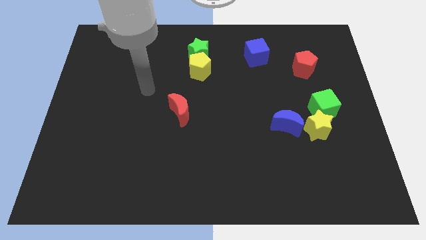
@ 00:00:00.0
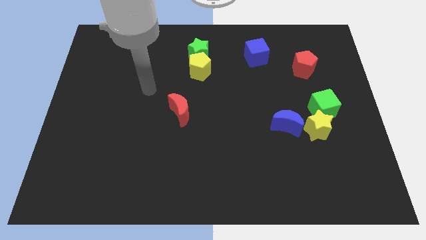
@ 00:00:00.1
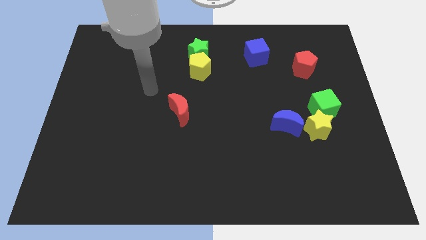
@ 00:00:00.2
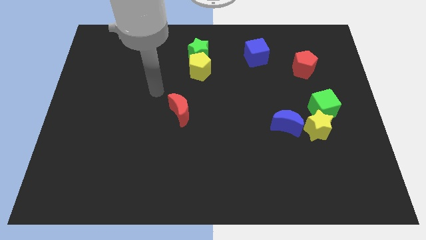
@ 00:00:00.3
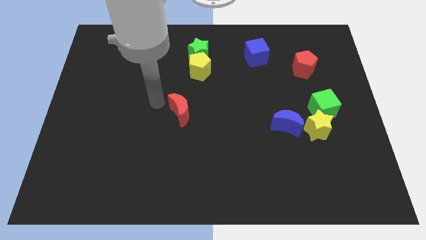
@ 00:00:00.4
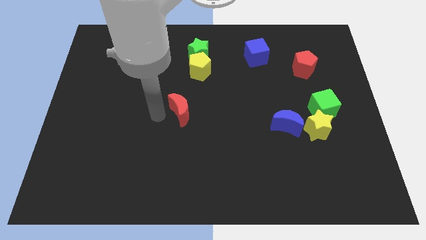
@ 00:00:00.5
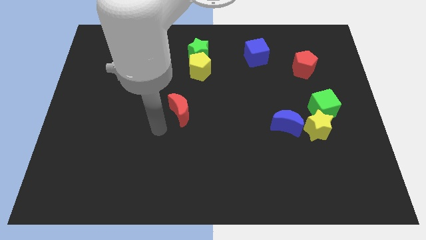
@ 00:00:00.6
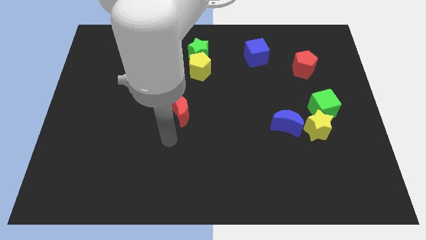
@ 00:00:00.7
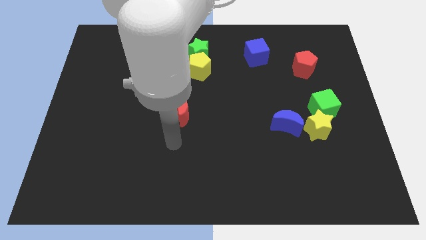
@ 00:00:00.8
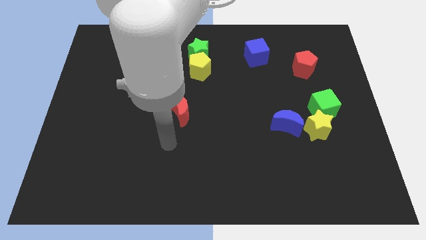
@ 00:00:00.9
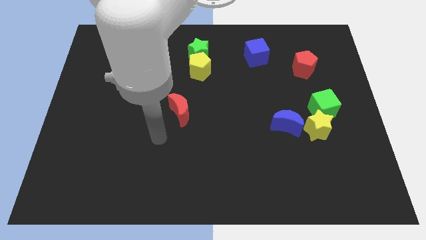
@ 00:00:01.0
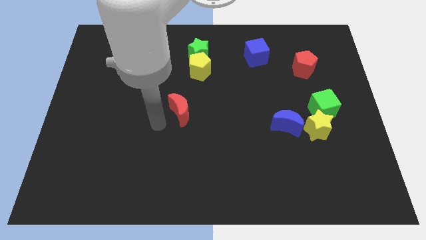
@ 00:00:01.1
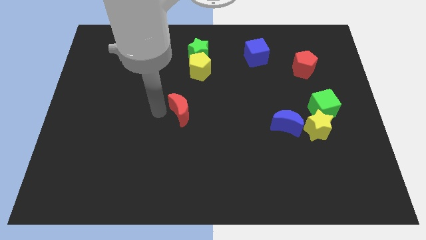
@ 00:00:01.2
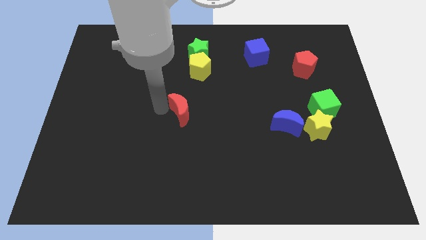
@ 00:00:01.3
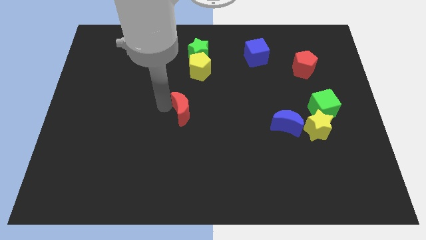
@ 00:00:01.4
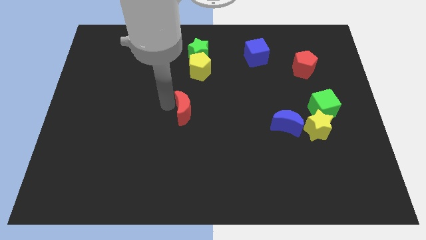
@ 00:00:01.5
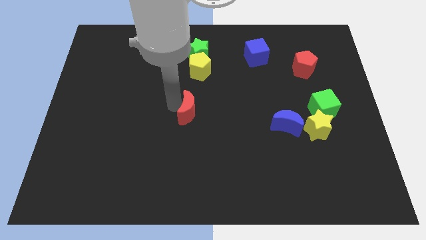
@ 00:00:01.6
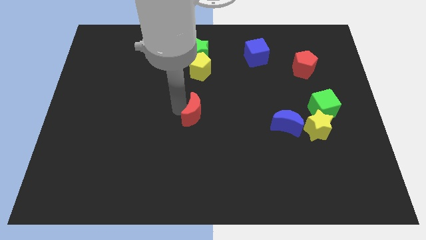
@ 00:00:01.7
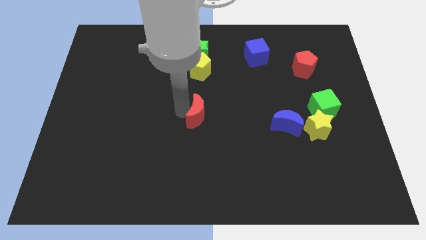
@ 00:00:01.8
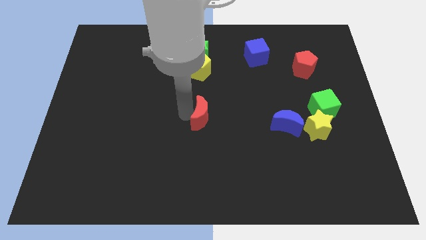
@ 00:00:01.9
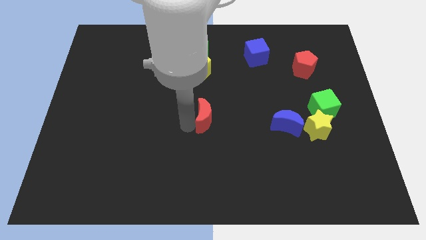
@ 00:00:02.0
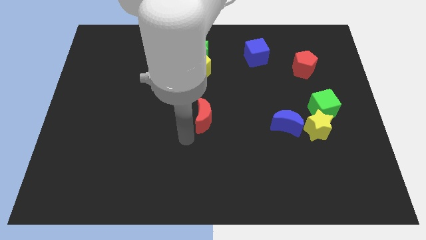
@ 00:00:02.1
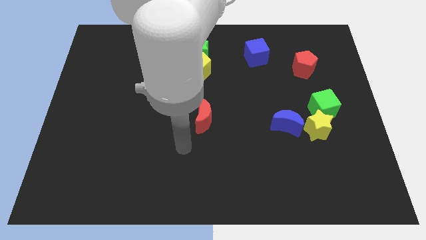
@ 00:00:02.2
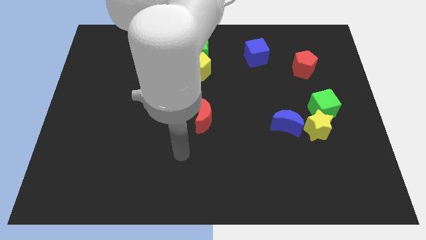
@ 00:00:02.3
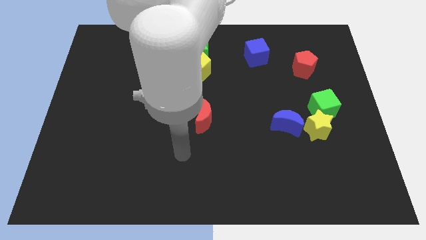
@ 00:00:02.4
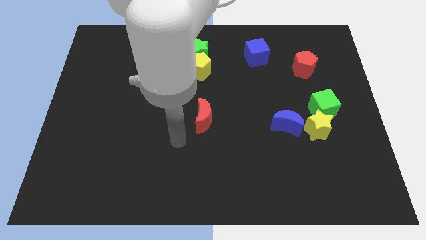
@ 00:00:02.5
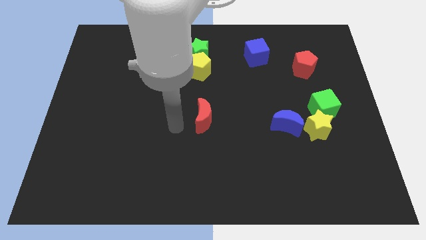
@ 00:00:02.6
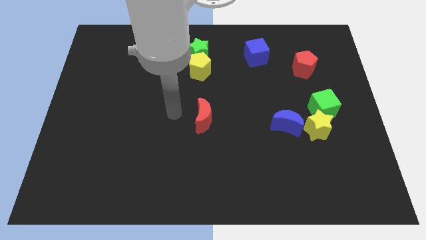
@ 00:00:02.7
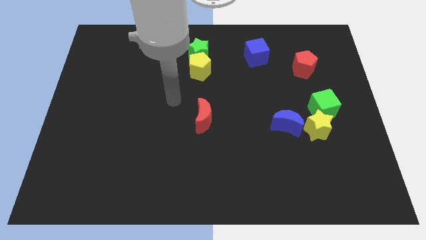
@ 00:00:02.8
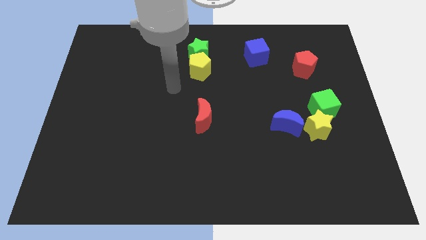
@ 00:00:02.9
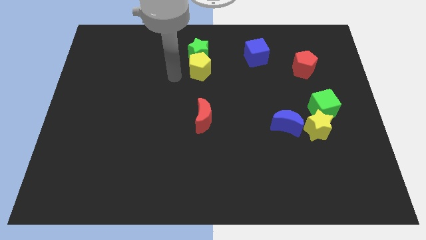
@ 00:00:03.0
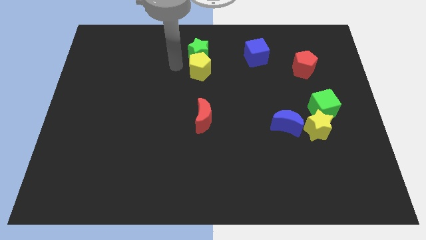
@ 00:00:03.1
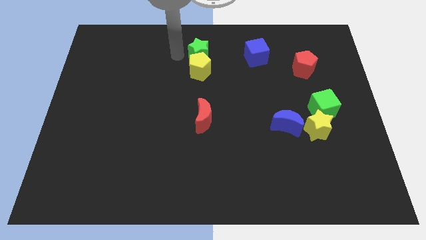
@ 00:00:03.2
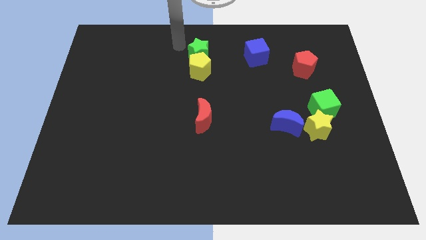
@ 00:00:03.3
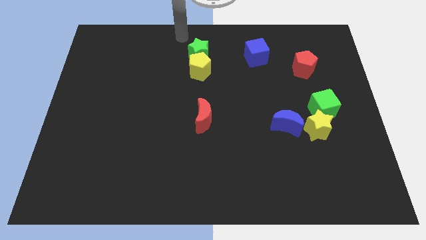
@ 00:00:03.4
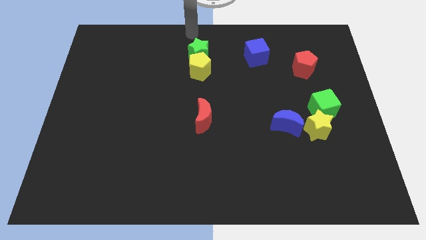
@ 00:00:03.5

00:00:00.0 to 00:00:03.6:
move the red moon to the right slightly

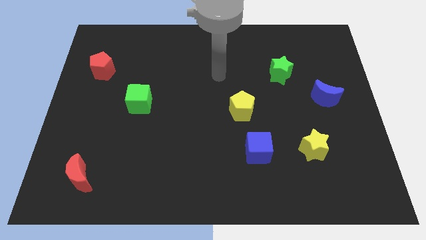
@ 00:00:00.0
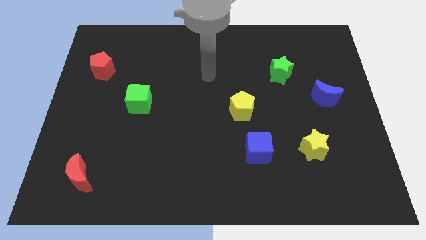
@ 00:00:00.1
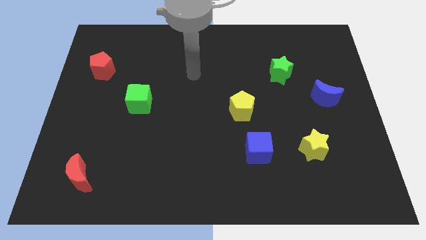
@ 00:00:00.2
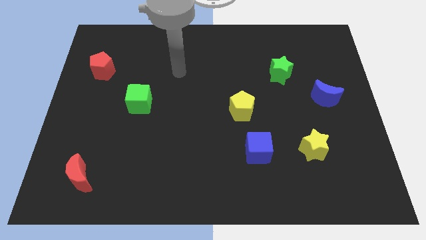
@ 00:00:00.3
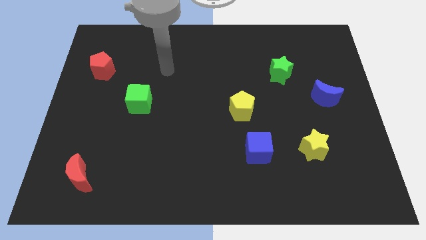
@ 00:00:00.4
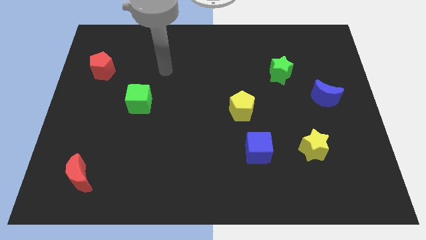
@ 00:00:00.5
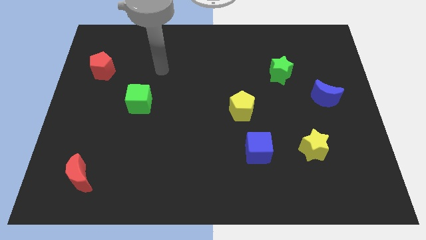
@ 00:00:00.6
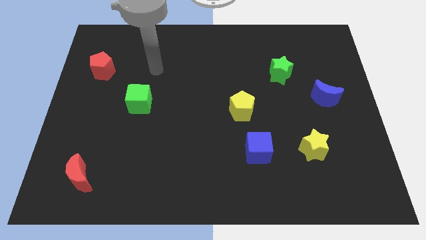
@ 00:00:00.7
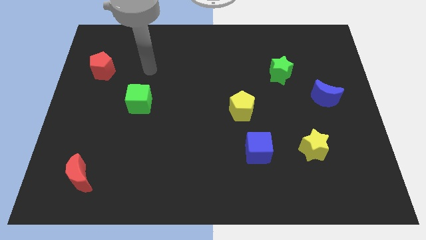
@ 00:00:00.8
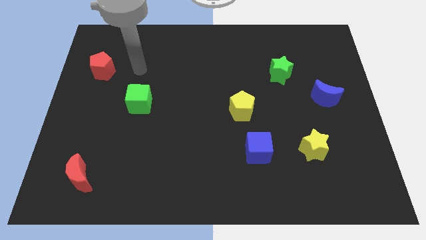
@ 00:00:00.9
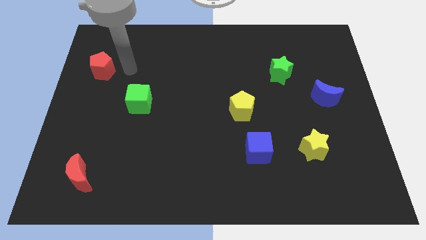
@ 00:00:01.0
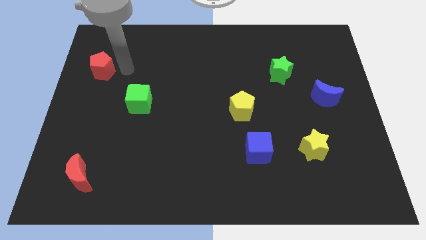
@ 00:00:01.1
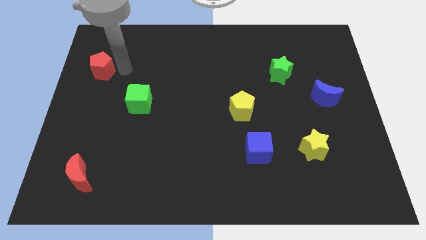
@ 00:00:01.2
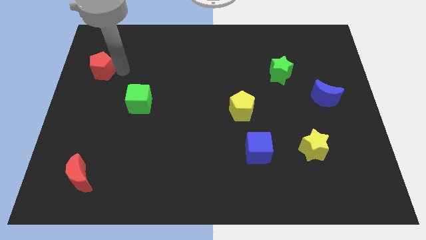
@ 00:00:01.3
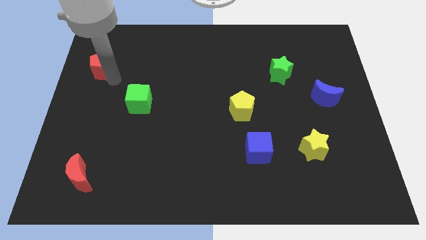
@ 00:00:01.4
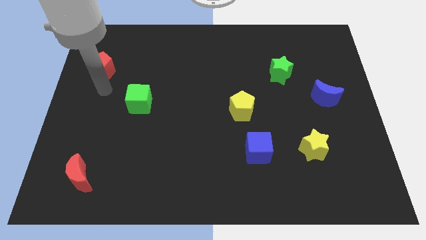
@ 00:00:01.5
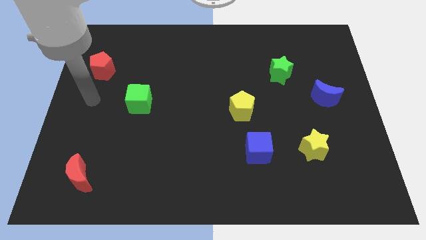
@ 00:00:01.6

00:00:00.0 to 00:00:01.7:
place the arm below the red pentagon

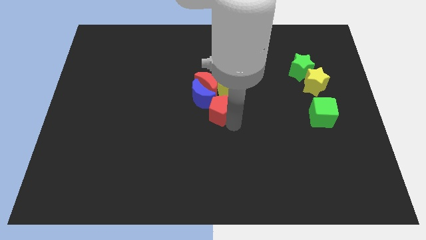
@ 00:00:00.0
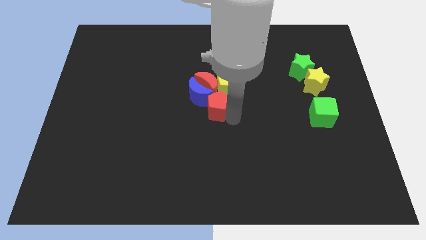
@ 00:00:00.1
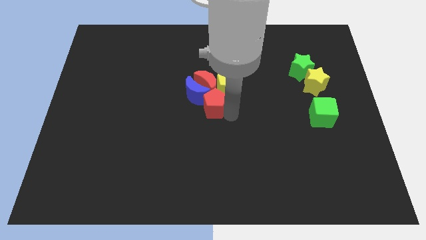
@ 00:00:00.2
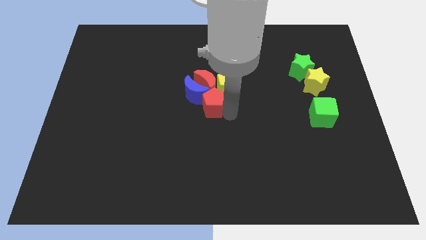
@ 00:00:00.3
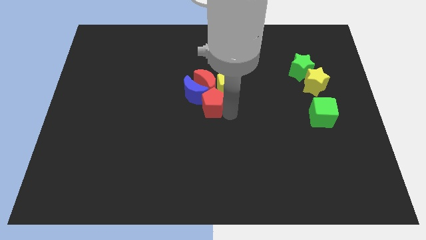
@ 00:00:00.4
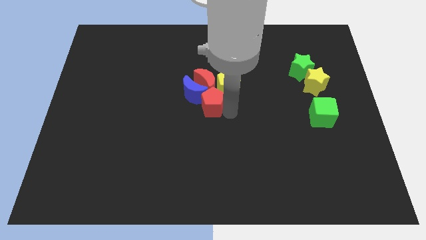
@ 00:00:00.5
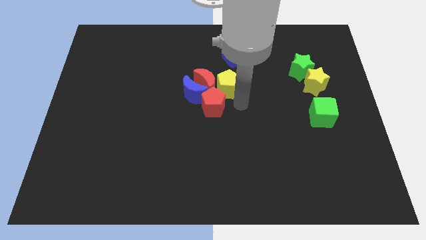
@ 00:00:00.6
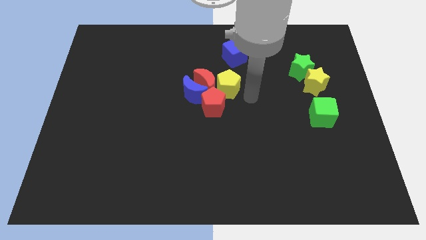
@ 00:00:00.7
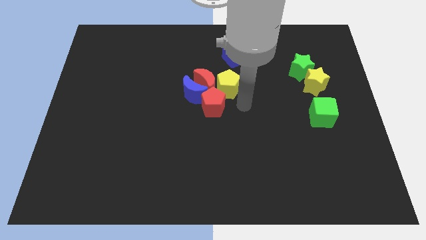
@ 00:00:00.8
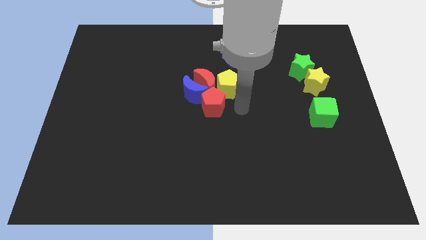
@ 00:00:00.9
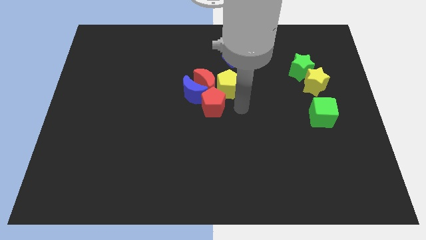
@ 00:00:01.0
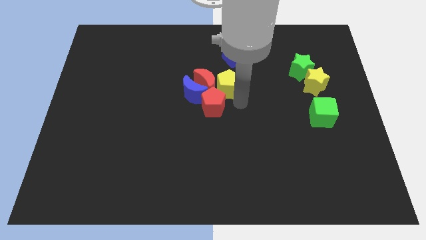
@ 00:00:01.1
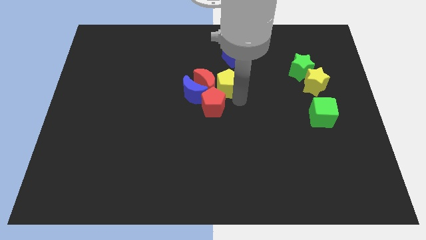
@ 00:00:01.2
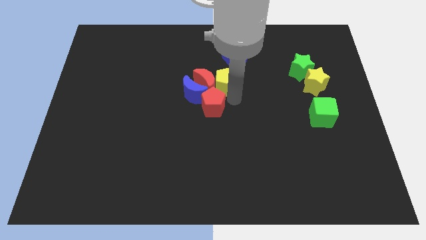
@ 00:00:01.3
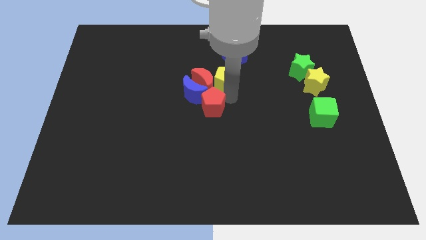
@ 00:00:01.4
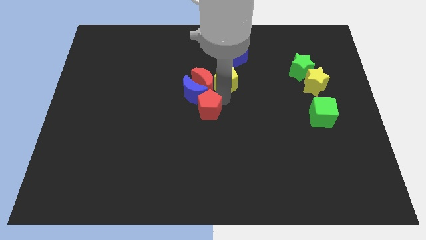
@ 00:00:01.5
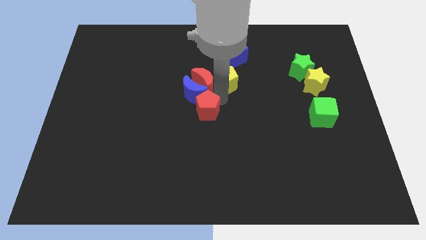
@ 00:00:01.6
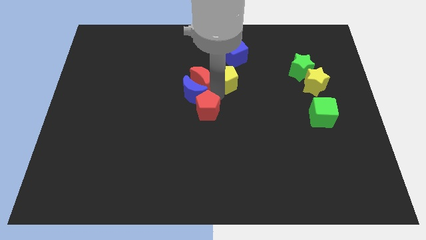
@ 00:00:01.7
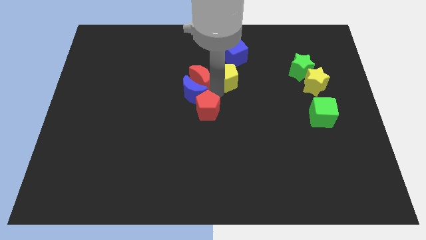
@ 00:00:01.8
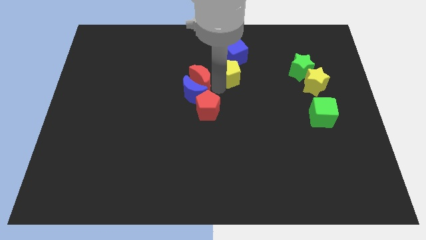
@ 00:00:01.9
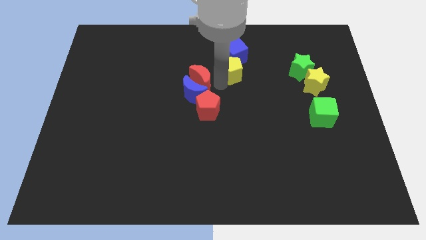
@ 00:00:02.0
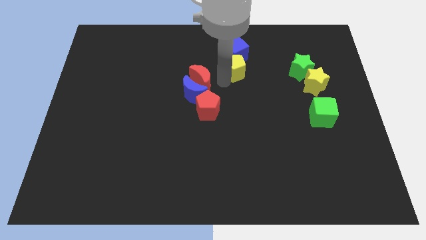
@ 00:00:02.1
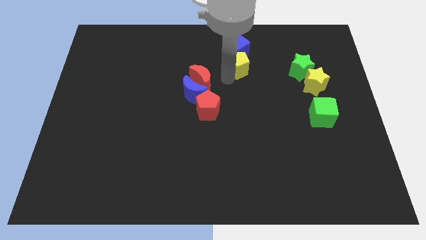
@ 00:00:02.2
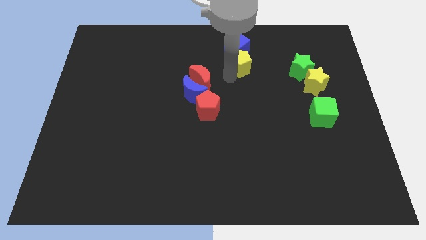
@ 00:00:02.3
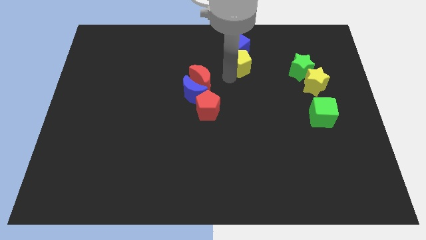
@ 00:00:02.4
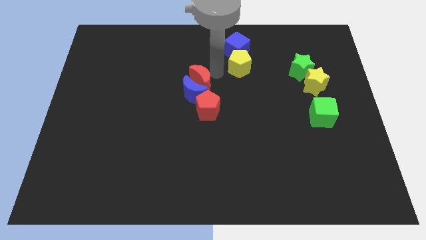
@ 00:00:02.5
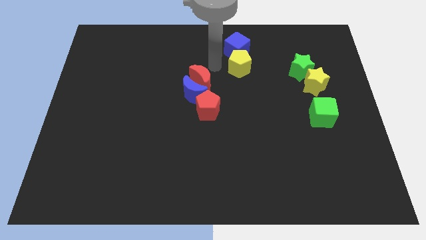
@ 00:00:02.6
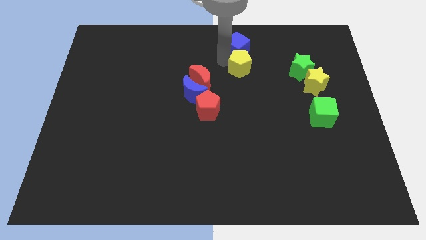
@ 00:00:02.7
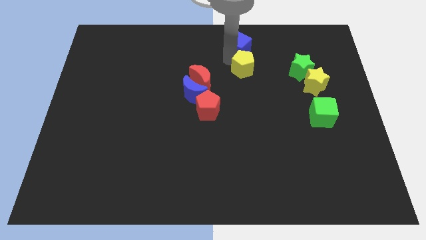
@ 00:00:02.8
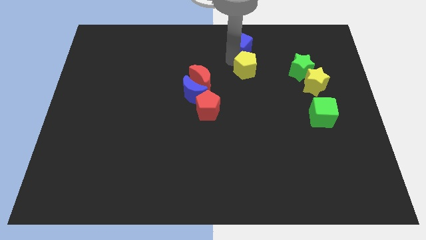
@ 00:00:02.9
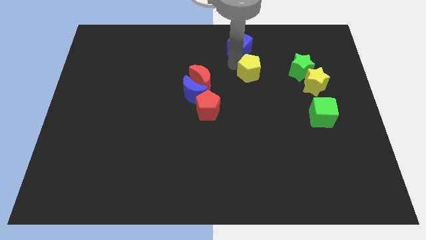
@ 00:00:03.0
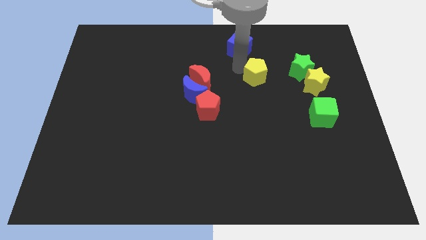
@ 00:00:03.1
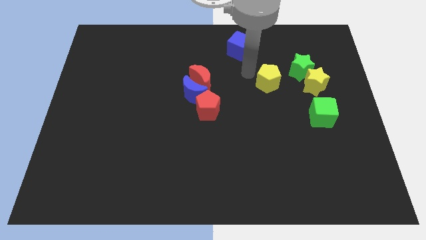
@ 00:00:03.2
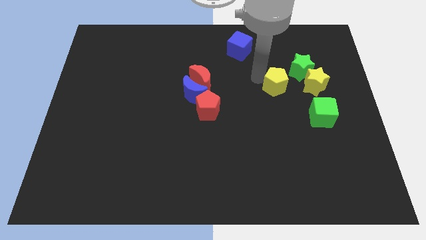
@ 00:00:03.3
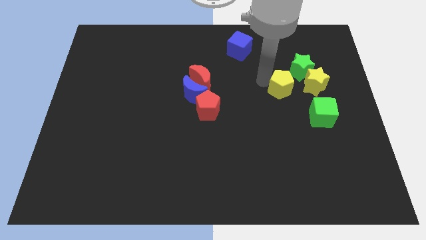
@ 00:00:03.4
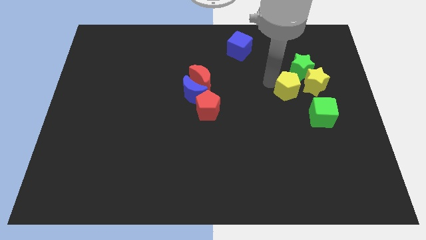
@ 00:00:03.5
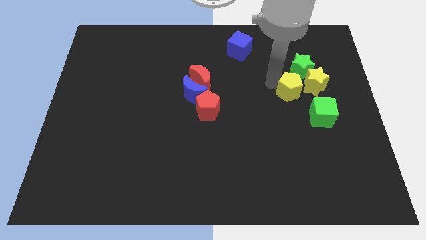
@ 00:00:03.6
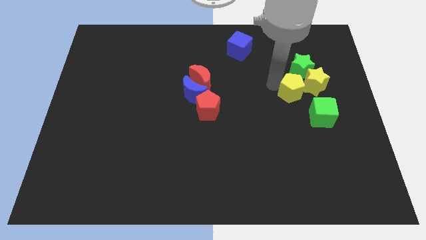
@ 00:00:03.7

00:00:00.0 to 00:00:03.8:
push the yellow pentagon to the left of the yellow star
